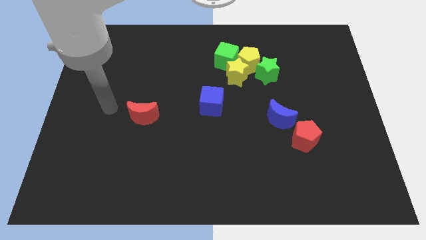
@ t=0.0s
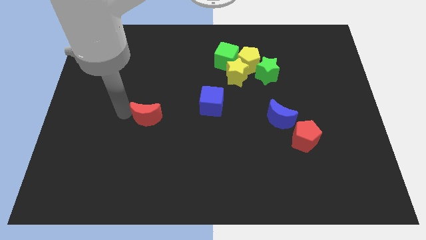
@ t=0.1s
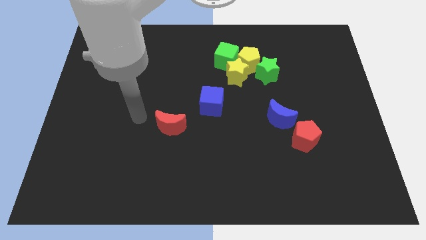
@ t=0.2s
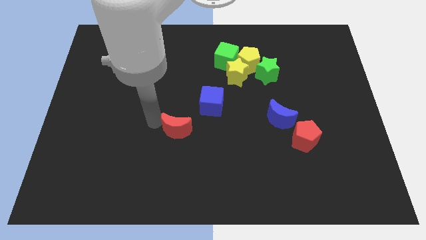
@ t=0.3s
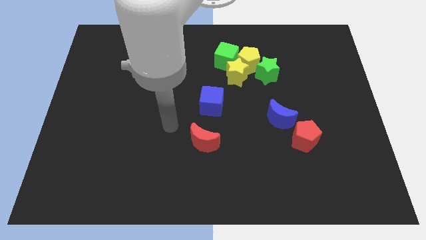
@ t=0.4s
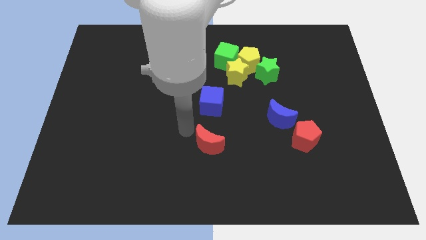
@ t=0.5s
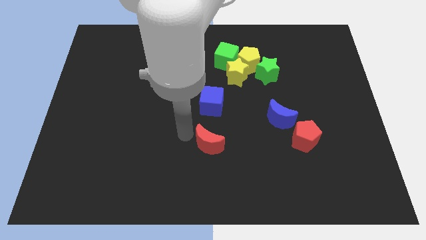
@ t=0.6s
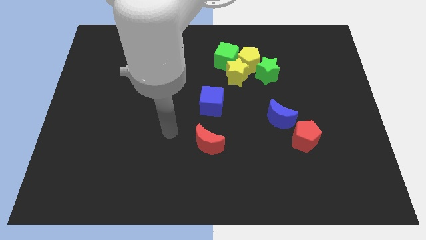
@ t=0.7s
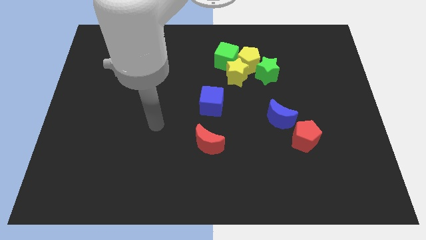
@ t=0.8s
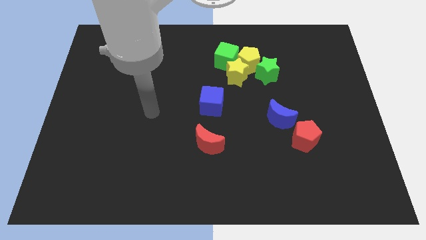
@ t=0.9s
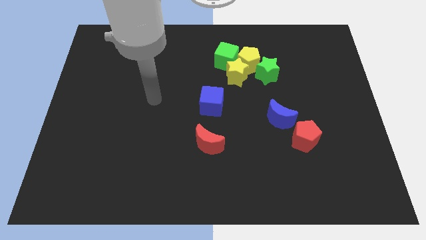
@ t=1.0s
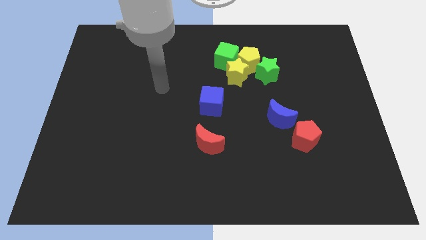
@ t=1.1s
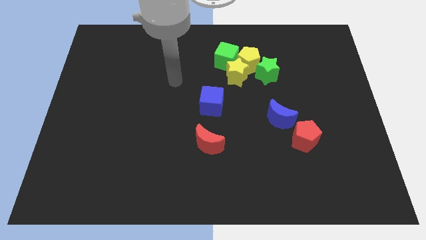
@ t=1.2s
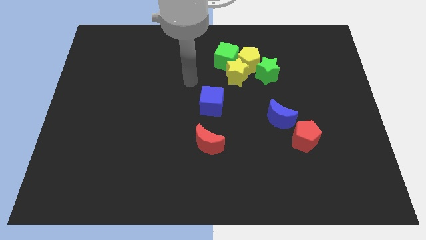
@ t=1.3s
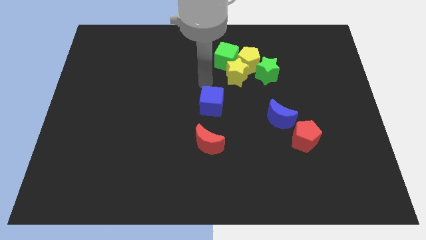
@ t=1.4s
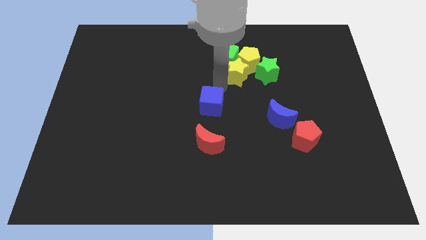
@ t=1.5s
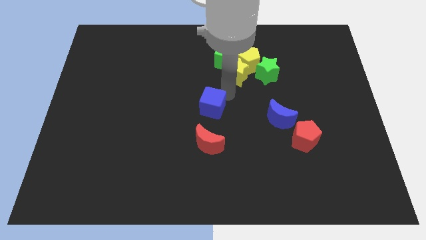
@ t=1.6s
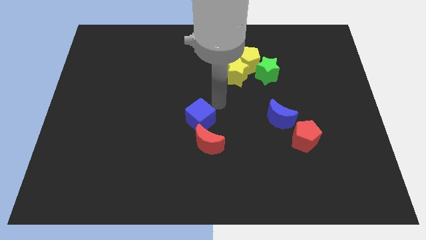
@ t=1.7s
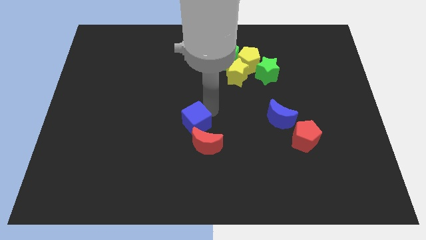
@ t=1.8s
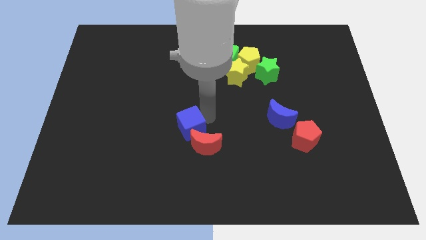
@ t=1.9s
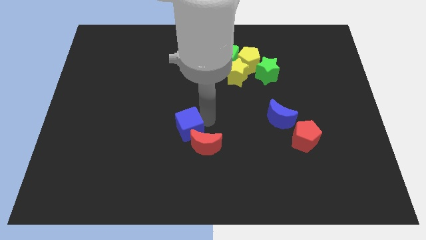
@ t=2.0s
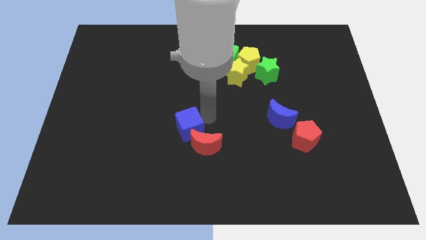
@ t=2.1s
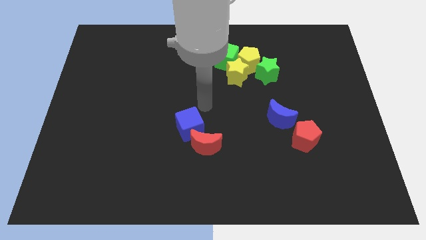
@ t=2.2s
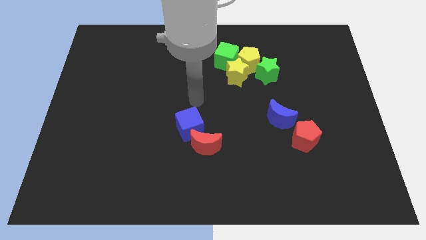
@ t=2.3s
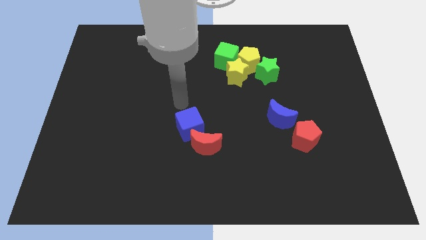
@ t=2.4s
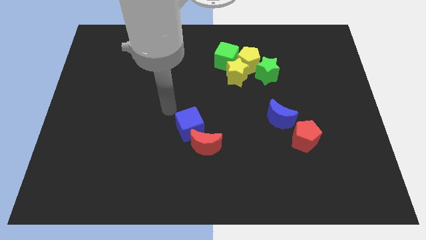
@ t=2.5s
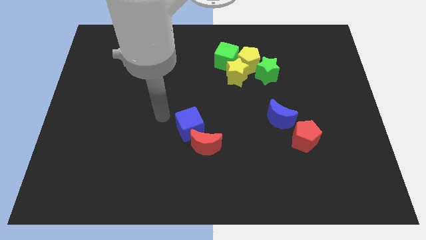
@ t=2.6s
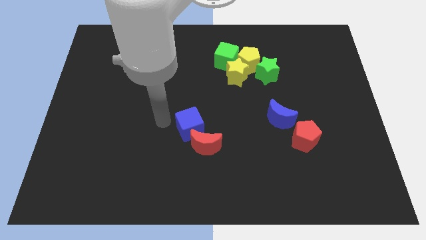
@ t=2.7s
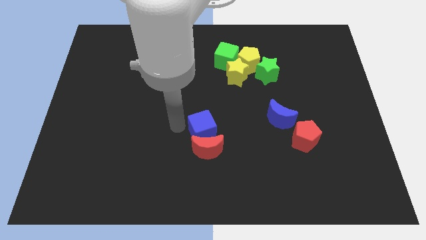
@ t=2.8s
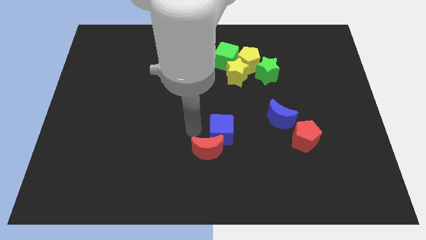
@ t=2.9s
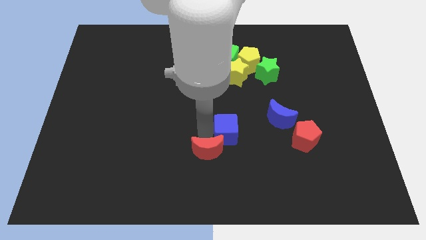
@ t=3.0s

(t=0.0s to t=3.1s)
push the blue cube into the red moon

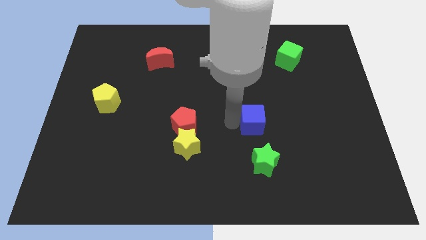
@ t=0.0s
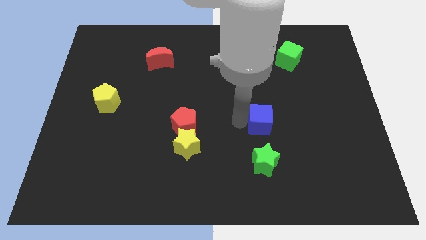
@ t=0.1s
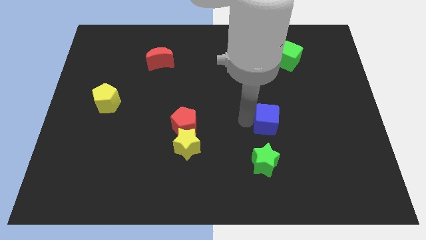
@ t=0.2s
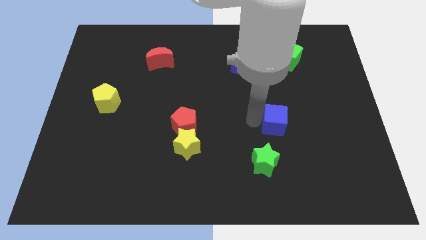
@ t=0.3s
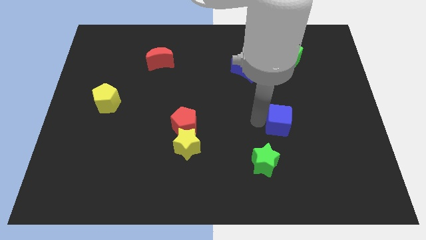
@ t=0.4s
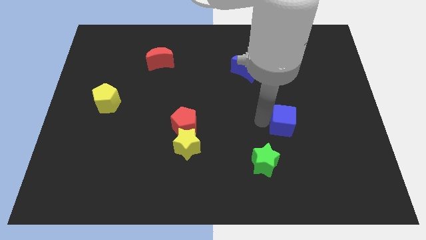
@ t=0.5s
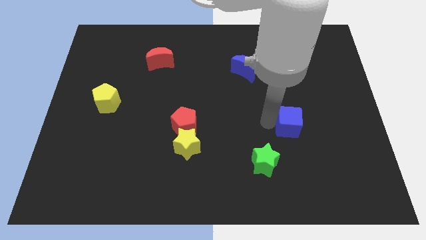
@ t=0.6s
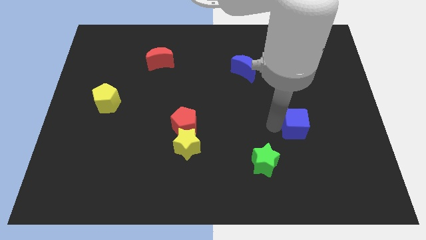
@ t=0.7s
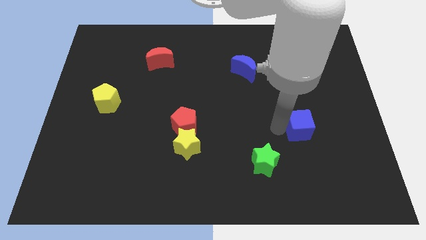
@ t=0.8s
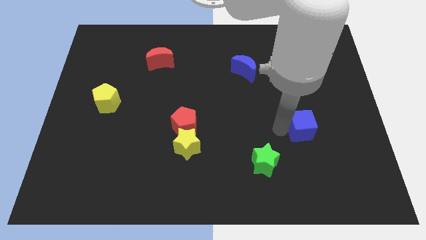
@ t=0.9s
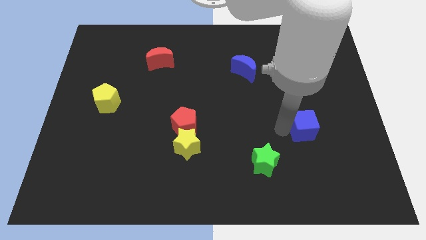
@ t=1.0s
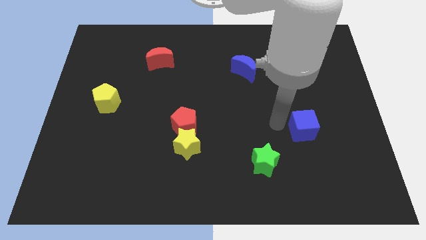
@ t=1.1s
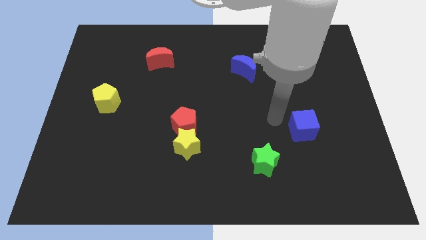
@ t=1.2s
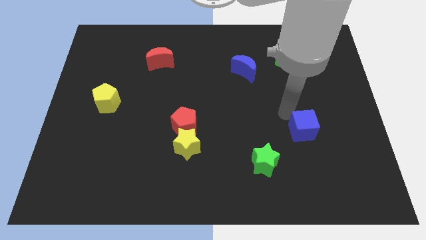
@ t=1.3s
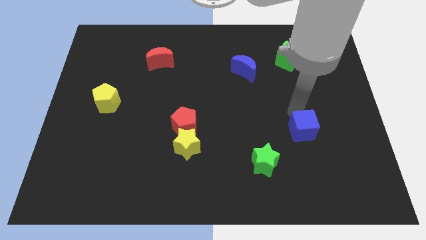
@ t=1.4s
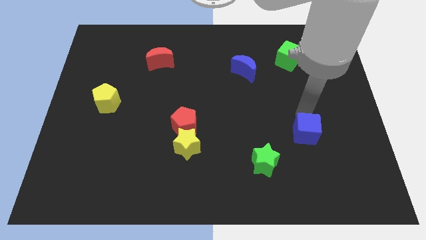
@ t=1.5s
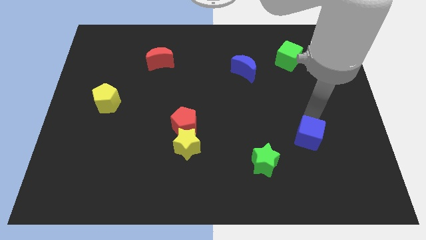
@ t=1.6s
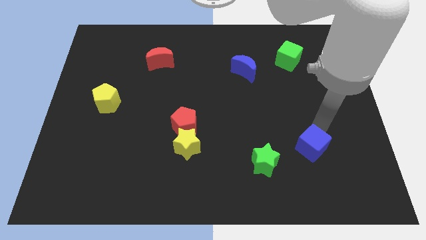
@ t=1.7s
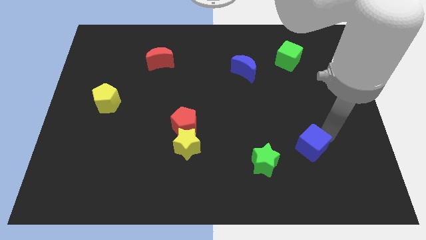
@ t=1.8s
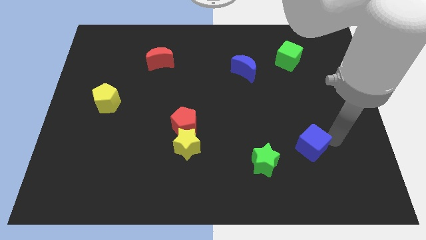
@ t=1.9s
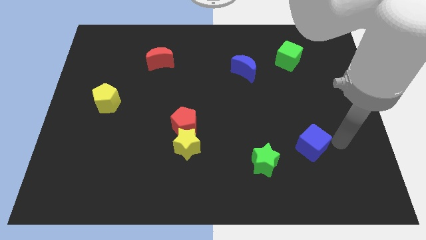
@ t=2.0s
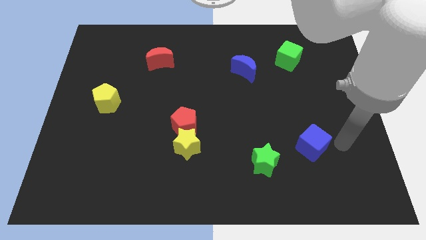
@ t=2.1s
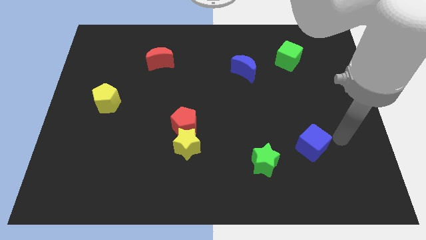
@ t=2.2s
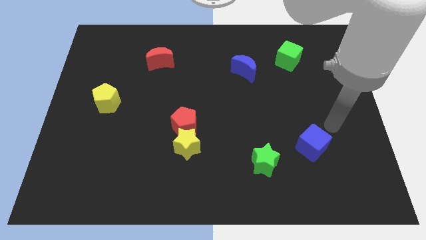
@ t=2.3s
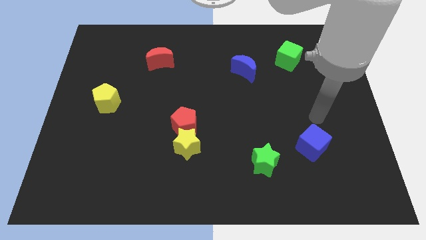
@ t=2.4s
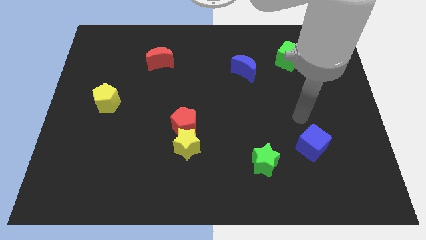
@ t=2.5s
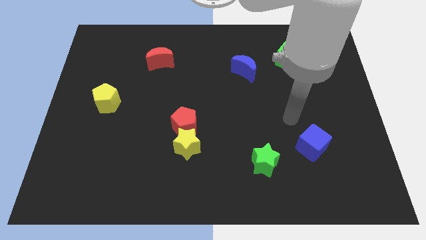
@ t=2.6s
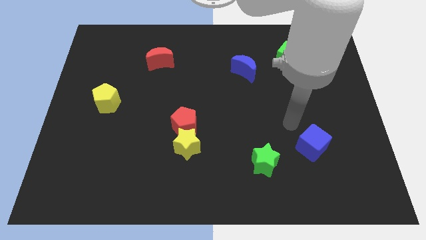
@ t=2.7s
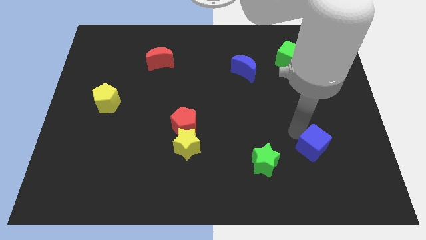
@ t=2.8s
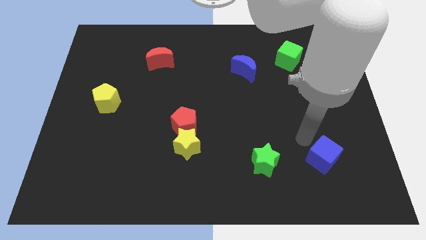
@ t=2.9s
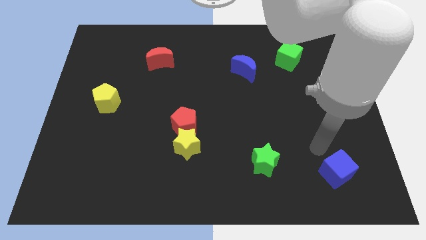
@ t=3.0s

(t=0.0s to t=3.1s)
place the blue cube to the right side of green star

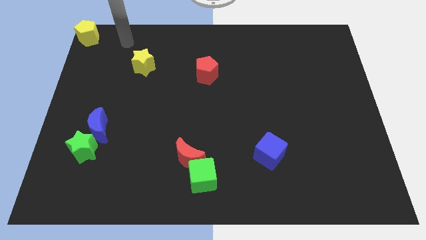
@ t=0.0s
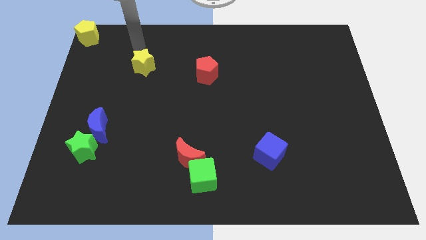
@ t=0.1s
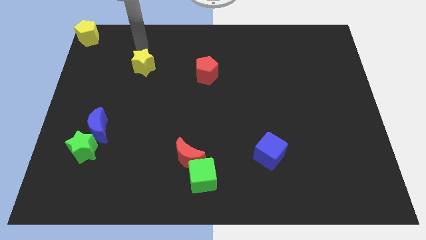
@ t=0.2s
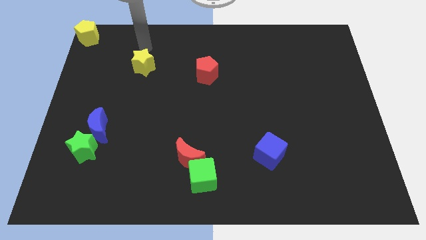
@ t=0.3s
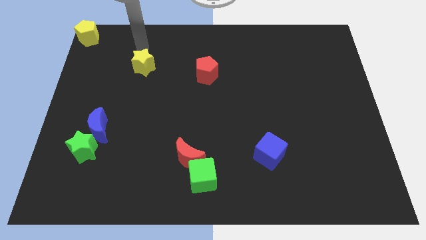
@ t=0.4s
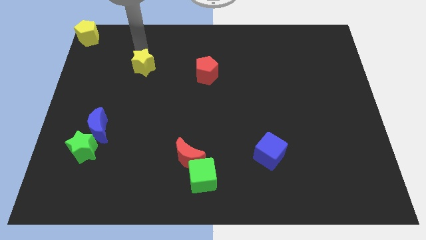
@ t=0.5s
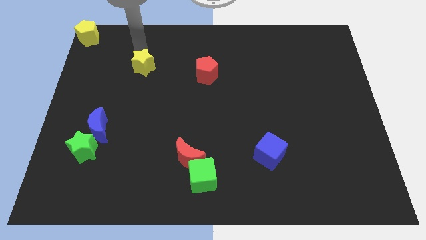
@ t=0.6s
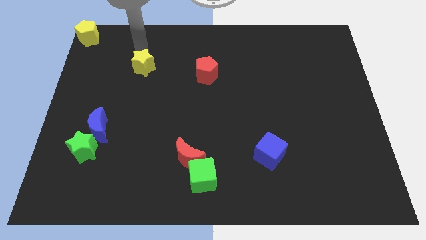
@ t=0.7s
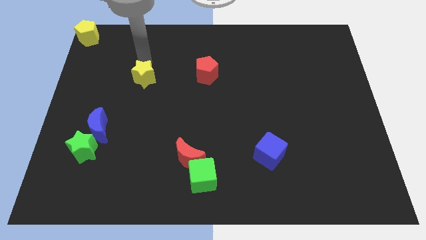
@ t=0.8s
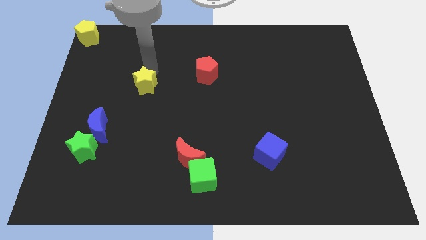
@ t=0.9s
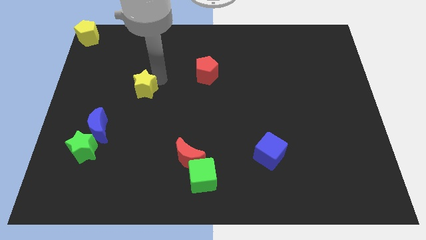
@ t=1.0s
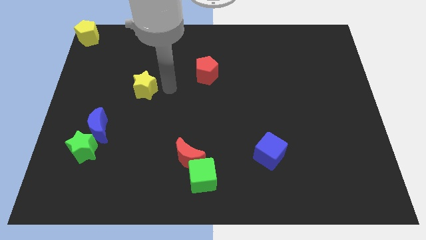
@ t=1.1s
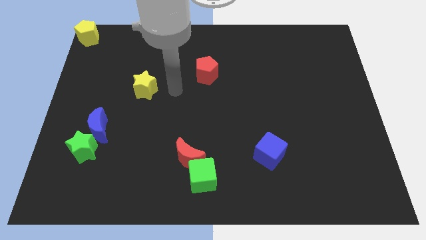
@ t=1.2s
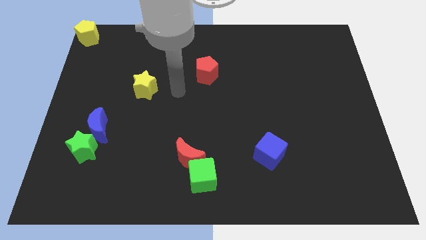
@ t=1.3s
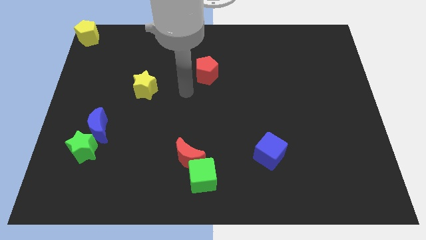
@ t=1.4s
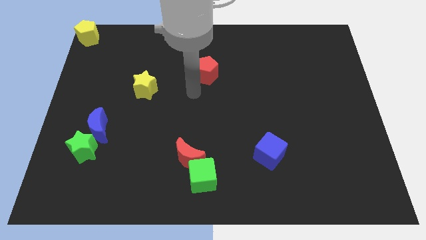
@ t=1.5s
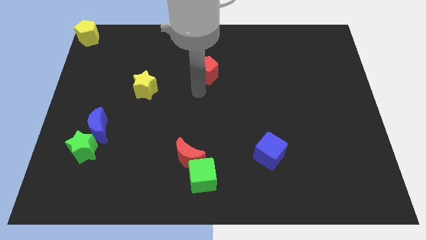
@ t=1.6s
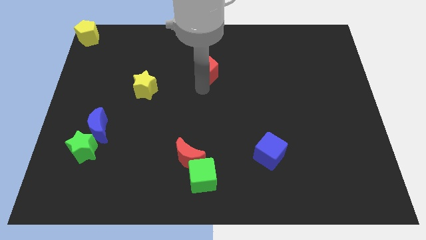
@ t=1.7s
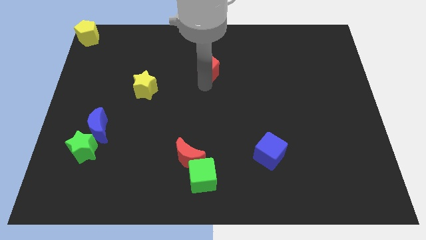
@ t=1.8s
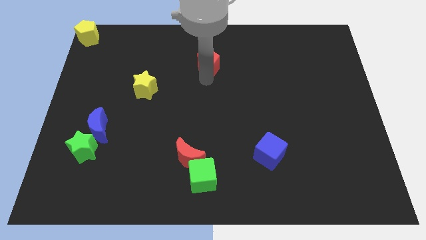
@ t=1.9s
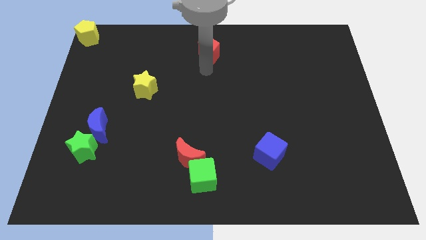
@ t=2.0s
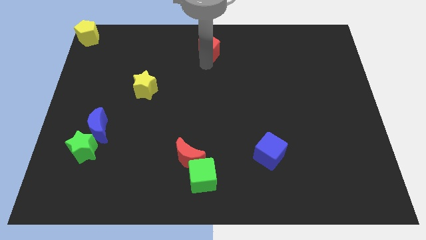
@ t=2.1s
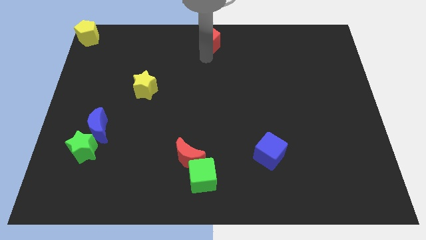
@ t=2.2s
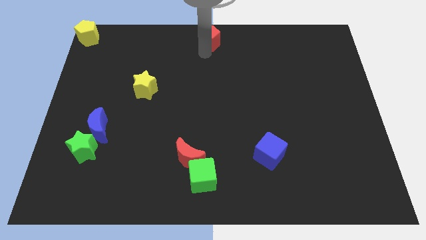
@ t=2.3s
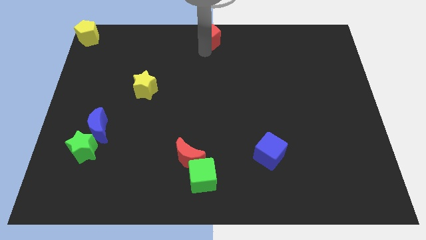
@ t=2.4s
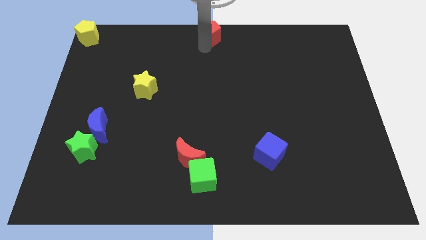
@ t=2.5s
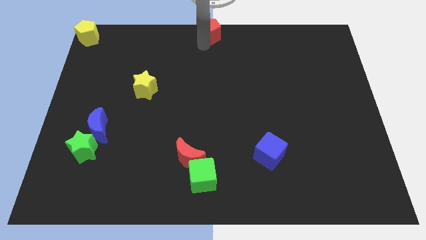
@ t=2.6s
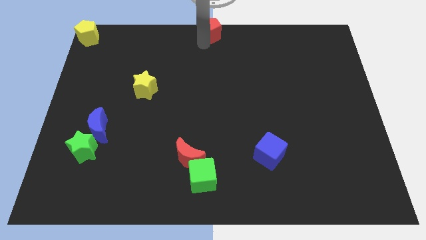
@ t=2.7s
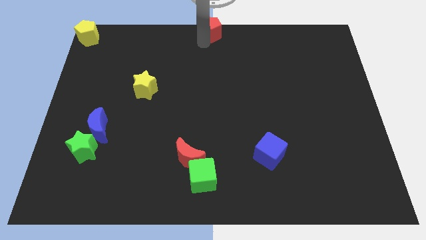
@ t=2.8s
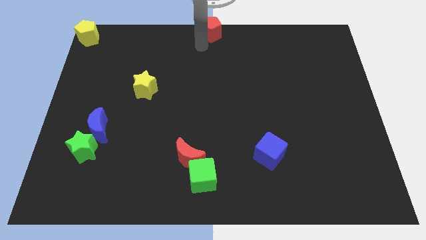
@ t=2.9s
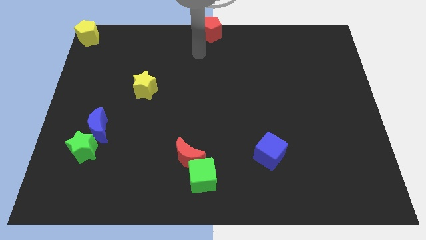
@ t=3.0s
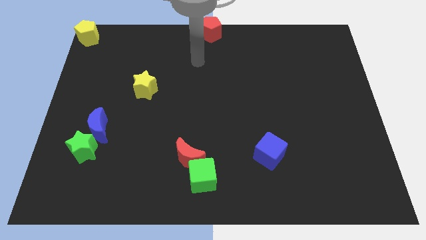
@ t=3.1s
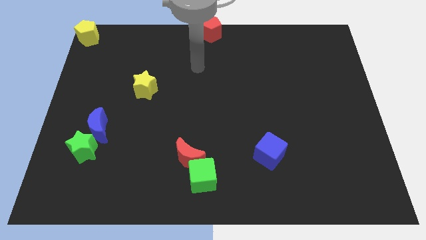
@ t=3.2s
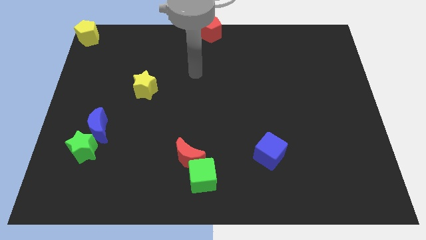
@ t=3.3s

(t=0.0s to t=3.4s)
push red pentagon diagonally top right to the yellow star
